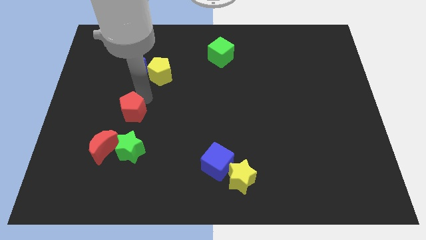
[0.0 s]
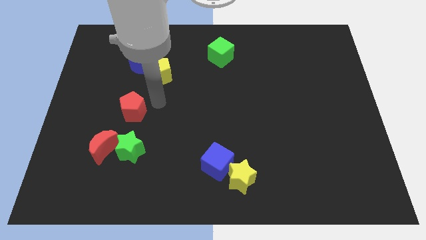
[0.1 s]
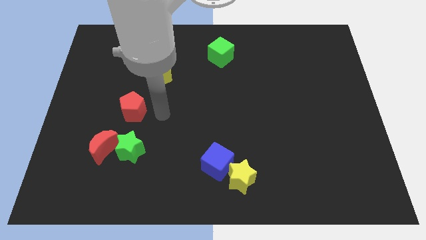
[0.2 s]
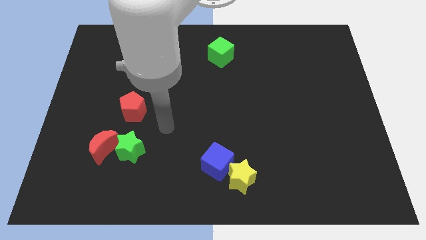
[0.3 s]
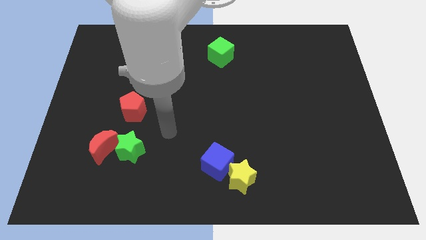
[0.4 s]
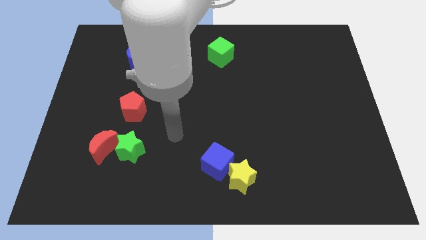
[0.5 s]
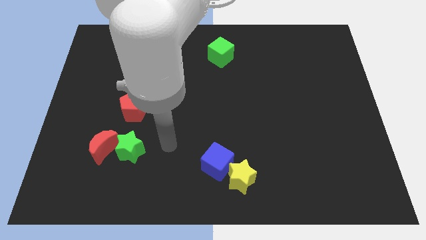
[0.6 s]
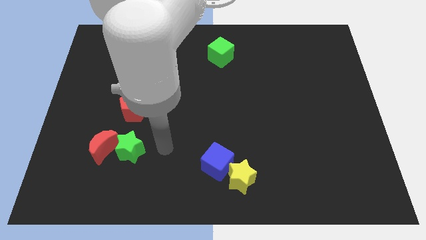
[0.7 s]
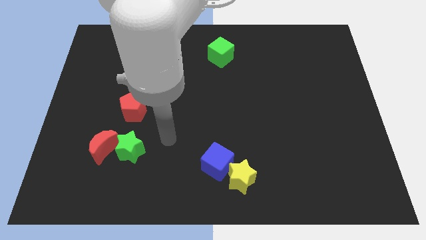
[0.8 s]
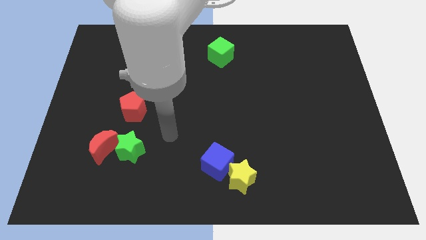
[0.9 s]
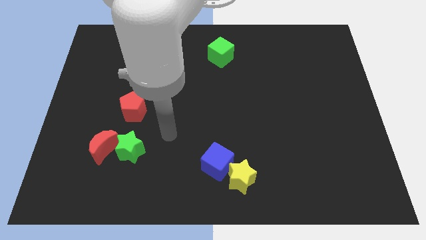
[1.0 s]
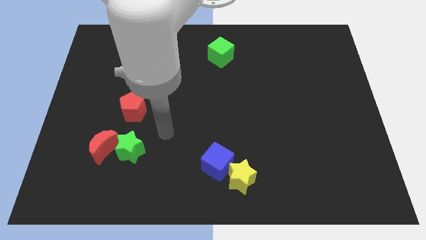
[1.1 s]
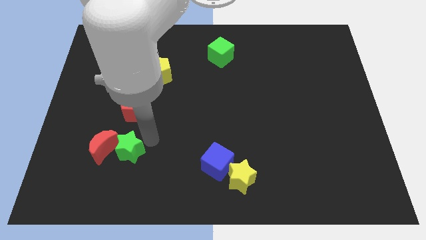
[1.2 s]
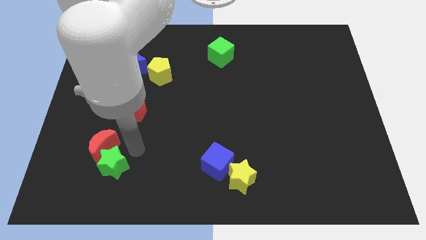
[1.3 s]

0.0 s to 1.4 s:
place your arm close to green star

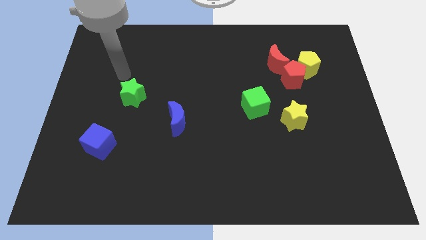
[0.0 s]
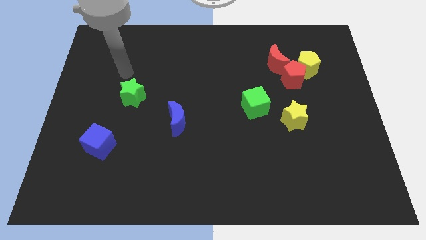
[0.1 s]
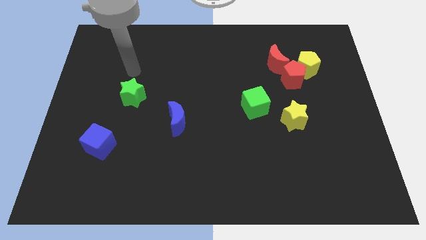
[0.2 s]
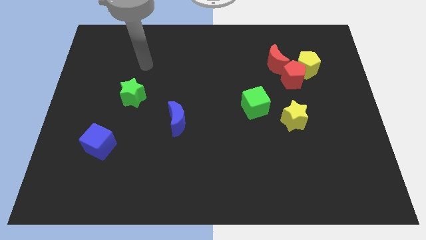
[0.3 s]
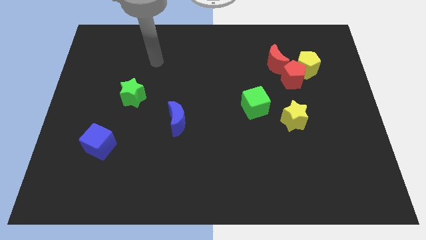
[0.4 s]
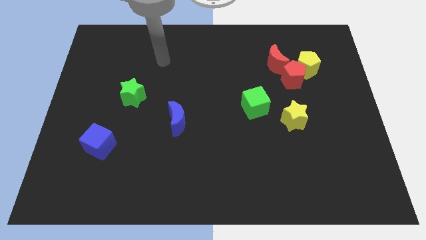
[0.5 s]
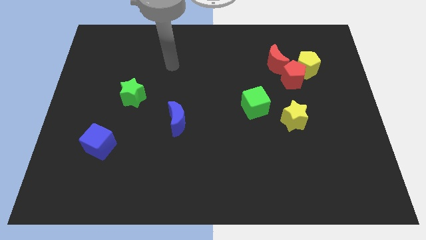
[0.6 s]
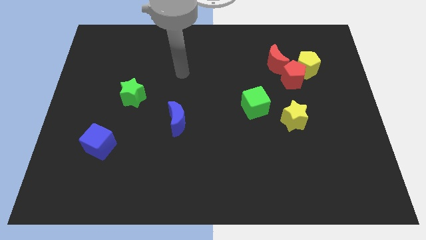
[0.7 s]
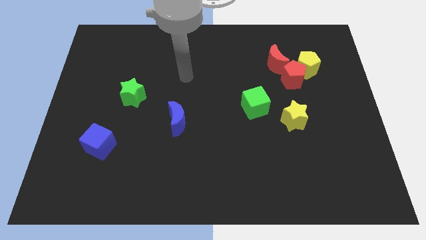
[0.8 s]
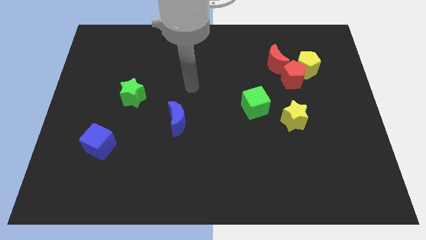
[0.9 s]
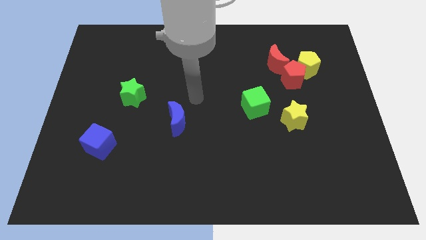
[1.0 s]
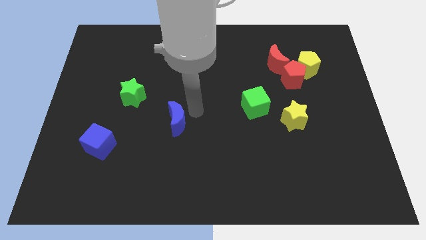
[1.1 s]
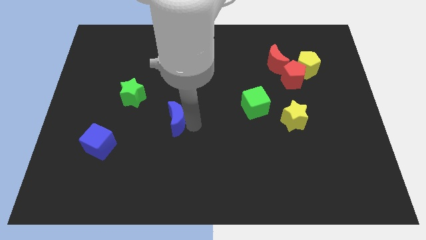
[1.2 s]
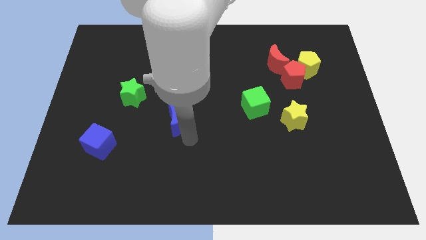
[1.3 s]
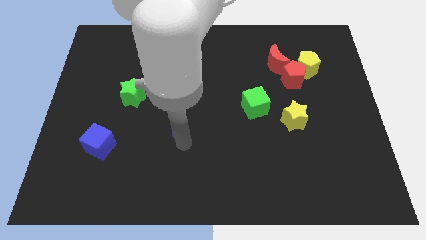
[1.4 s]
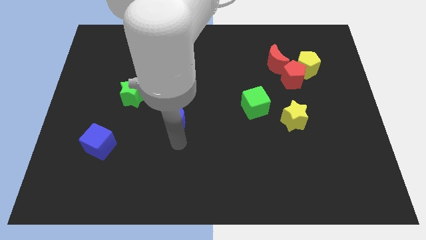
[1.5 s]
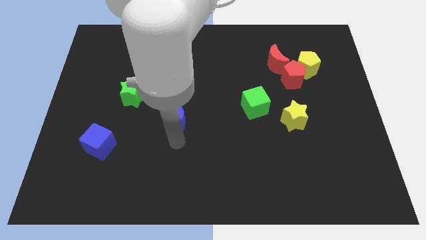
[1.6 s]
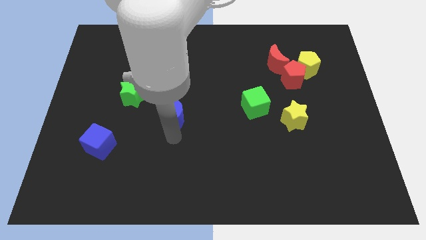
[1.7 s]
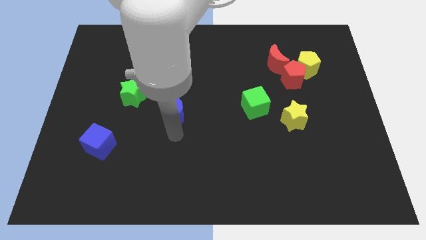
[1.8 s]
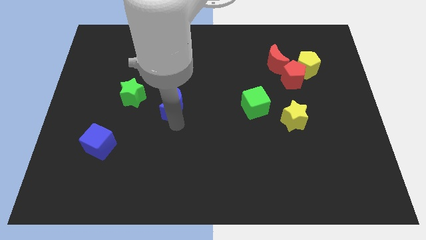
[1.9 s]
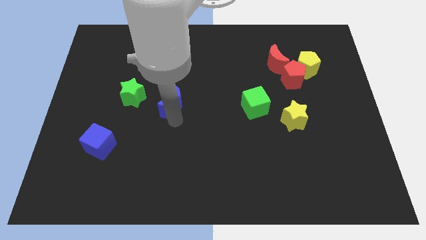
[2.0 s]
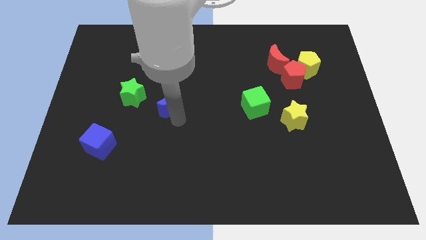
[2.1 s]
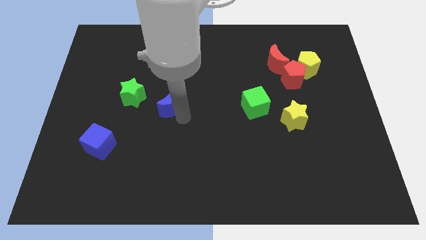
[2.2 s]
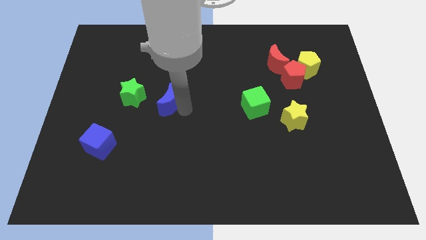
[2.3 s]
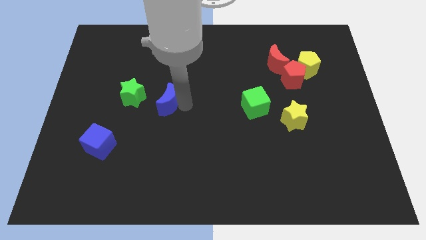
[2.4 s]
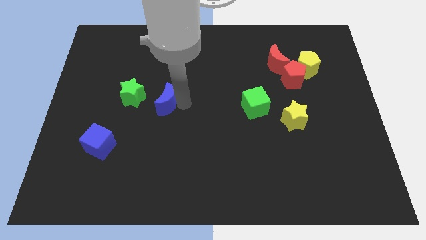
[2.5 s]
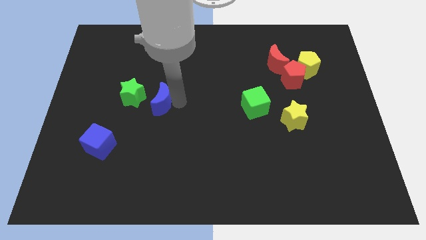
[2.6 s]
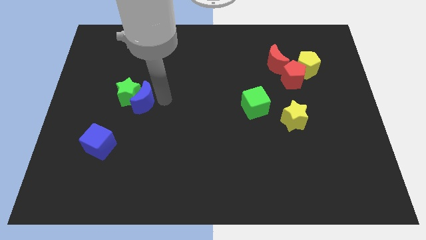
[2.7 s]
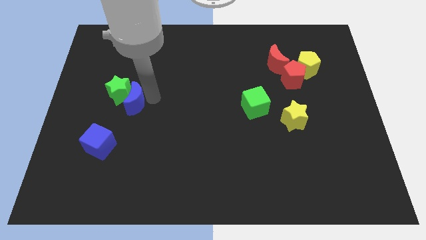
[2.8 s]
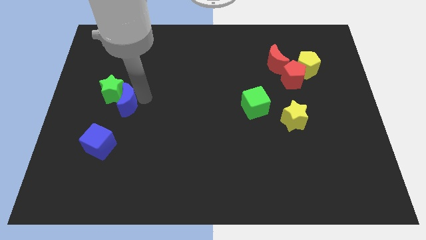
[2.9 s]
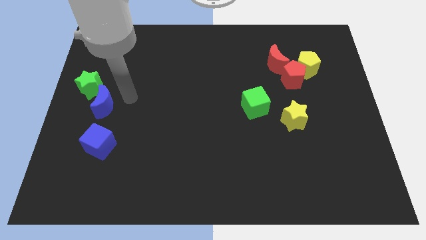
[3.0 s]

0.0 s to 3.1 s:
push the blue crescent into the green star

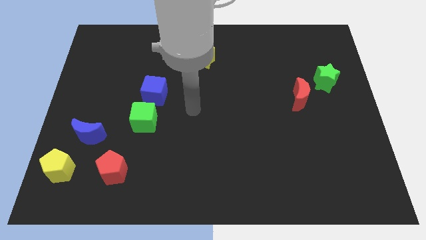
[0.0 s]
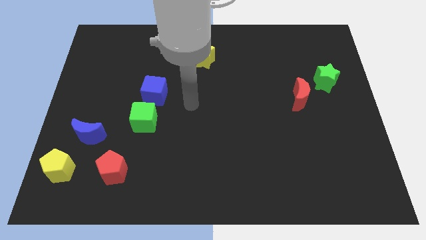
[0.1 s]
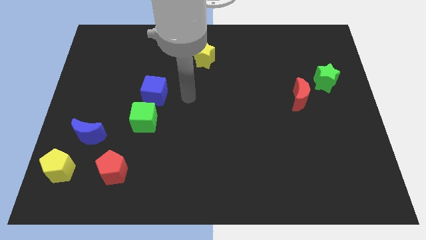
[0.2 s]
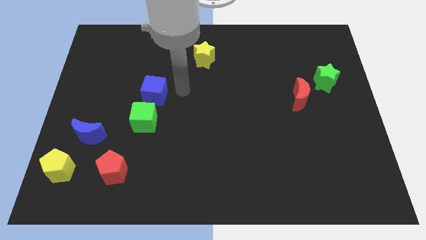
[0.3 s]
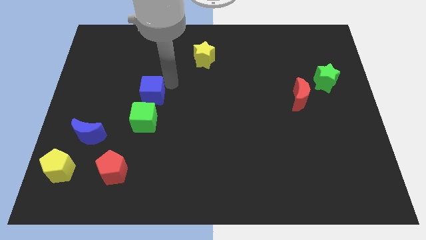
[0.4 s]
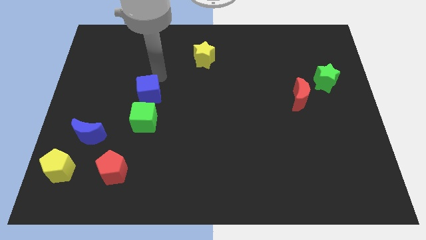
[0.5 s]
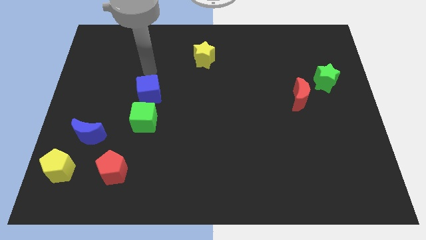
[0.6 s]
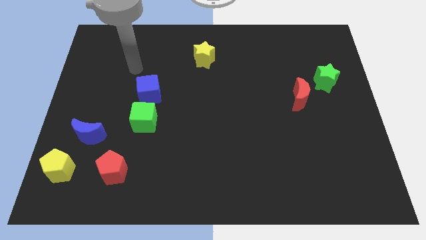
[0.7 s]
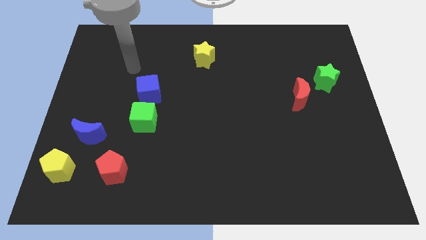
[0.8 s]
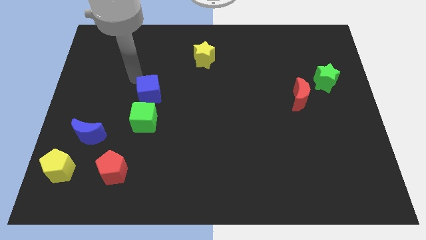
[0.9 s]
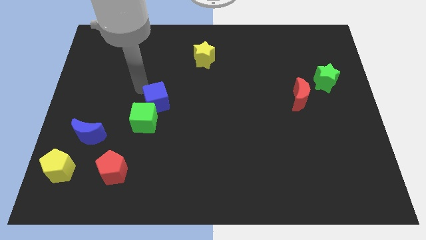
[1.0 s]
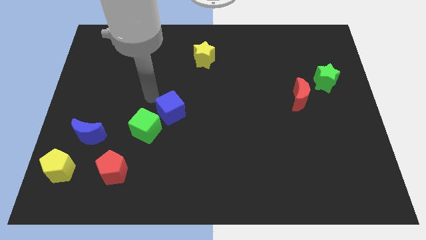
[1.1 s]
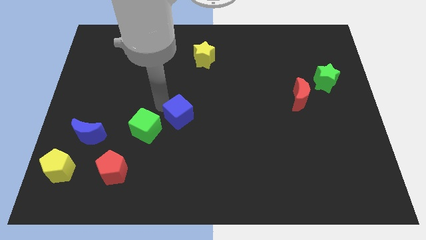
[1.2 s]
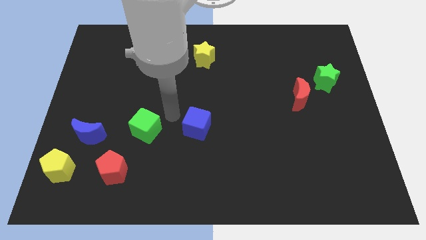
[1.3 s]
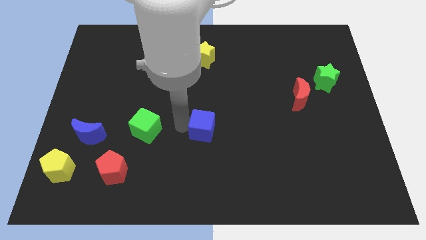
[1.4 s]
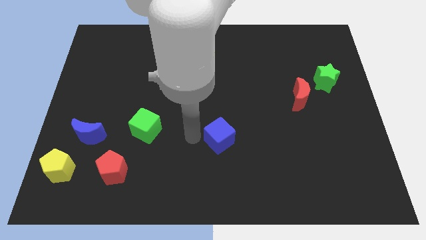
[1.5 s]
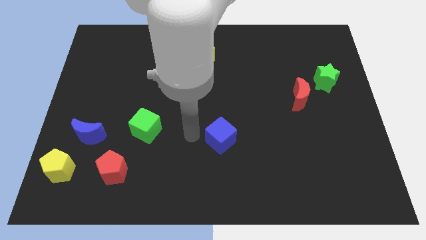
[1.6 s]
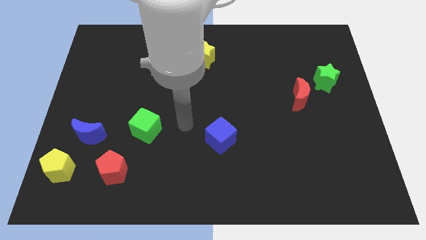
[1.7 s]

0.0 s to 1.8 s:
slide the blue cube towards the center of the board

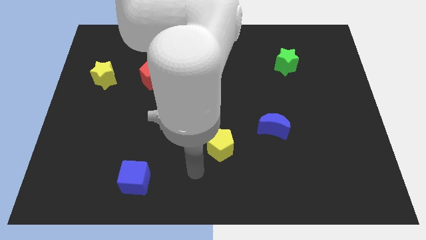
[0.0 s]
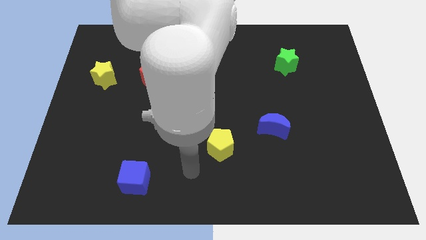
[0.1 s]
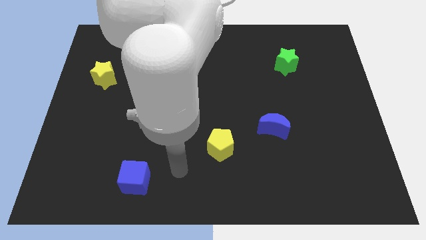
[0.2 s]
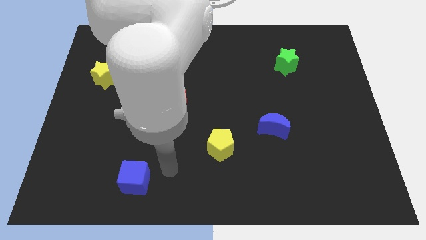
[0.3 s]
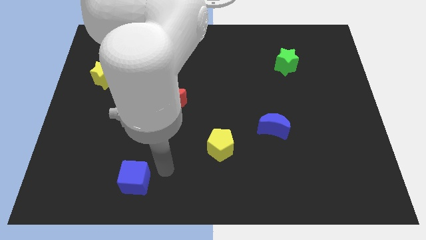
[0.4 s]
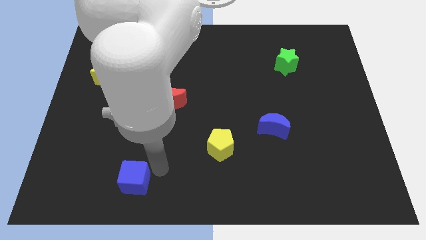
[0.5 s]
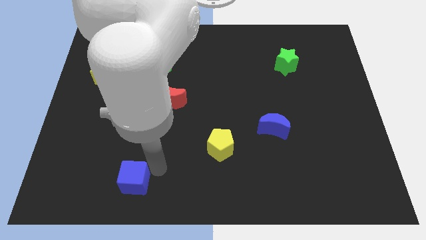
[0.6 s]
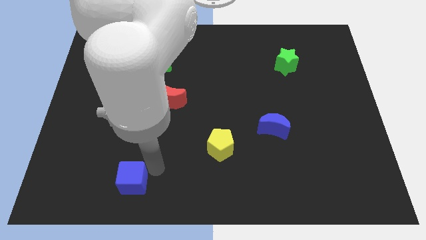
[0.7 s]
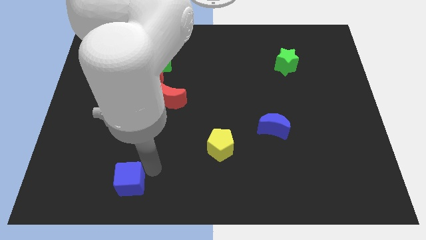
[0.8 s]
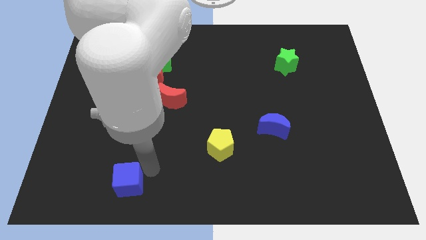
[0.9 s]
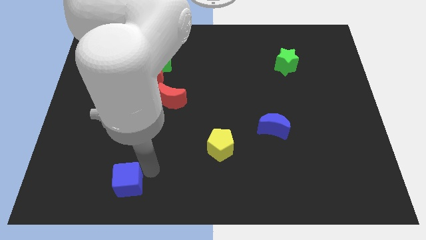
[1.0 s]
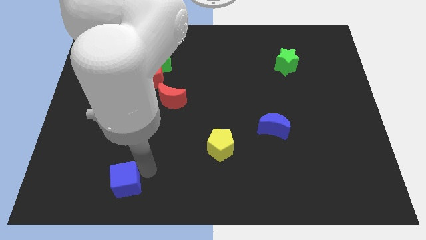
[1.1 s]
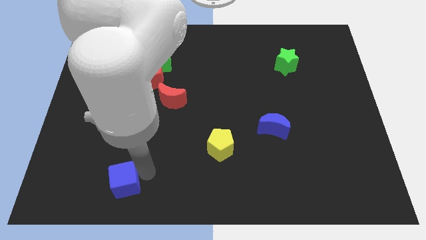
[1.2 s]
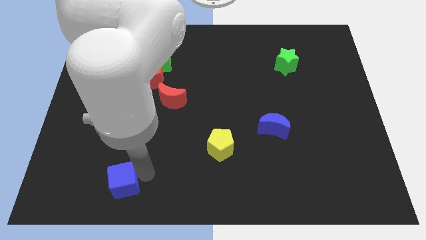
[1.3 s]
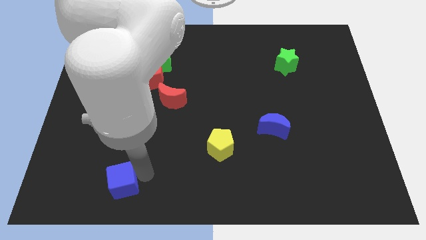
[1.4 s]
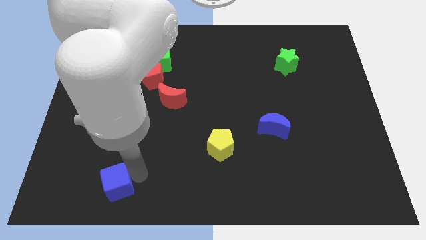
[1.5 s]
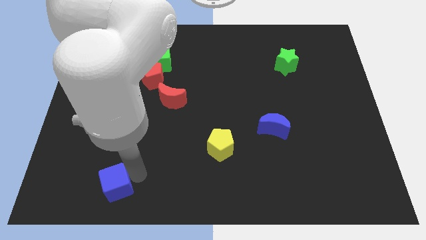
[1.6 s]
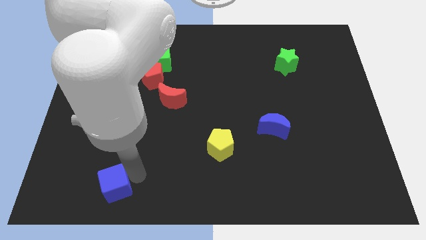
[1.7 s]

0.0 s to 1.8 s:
slightly move the blue cube to the left of the board

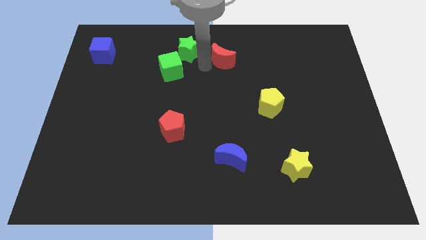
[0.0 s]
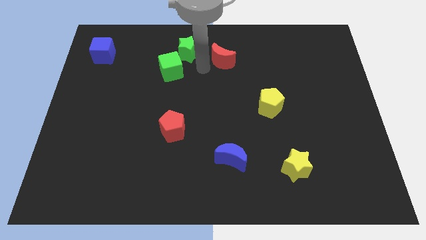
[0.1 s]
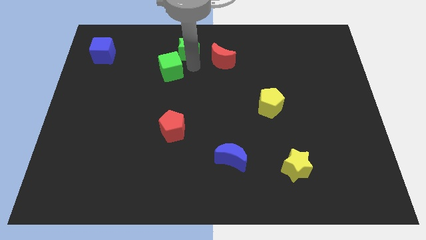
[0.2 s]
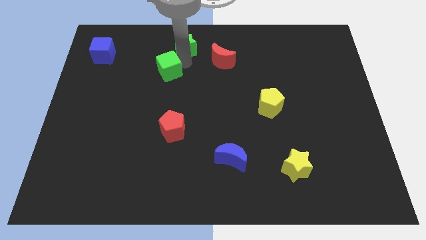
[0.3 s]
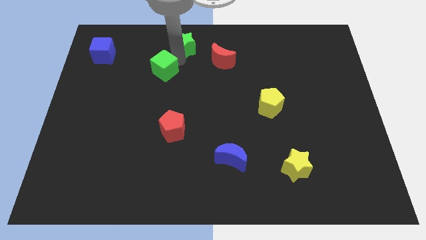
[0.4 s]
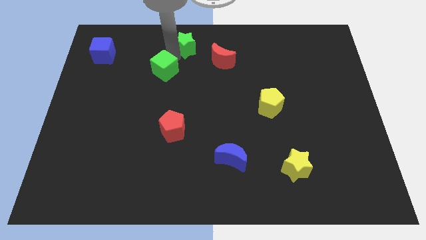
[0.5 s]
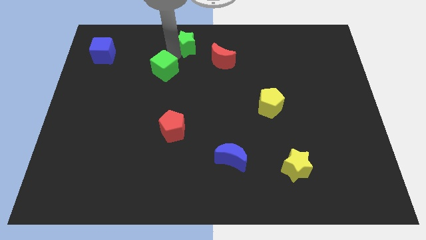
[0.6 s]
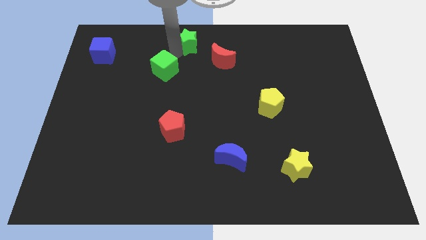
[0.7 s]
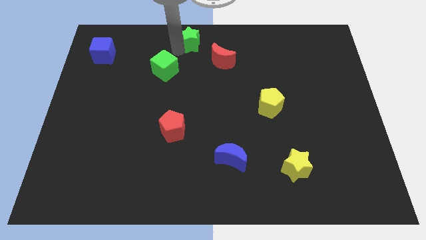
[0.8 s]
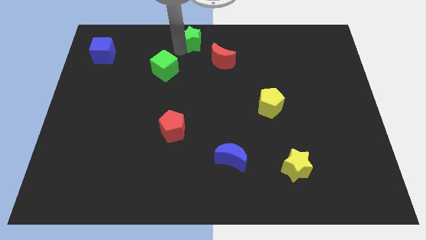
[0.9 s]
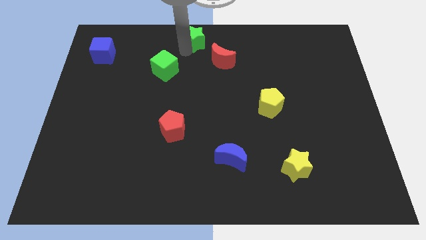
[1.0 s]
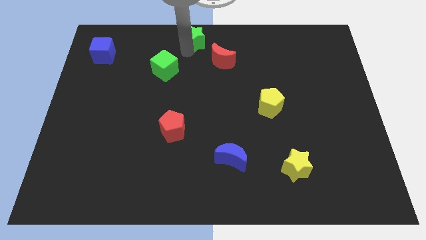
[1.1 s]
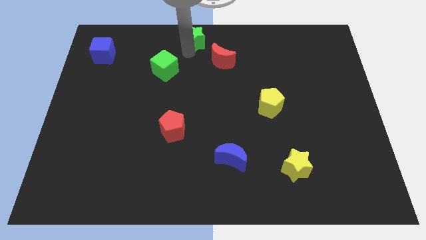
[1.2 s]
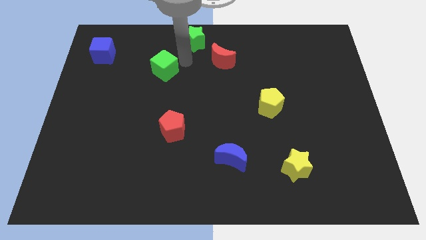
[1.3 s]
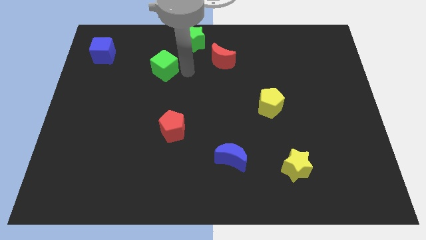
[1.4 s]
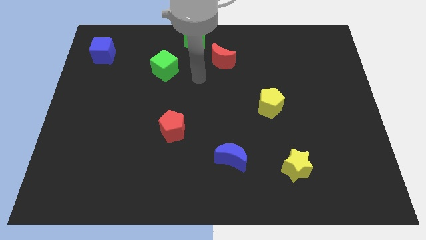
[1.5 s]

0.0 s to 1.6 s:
move the green star to the top center of the board
